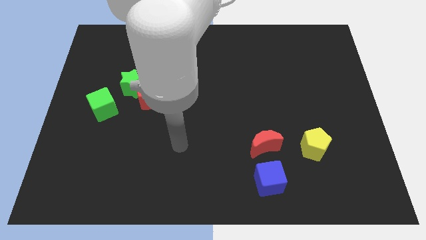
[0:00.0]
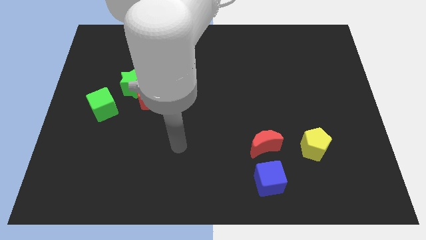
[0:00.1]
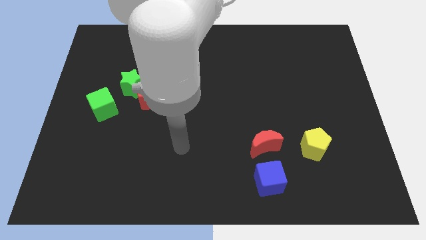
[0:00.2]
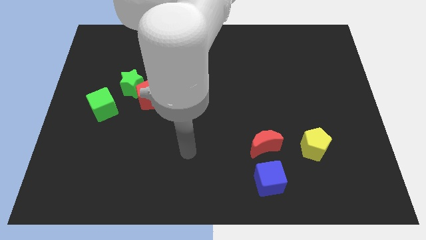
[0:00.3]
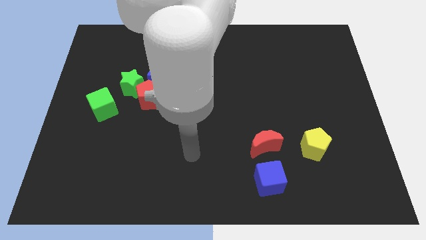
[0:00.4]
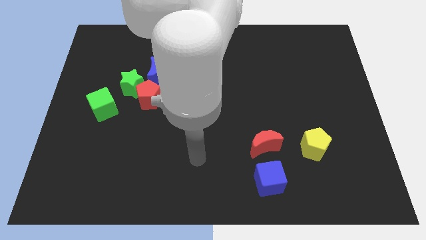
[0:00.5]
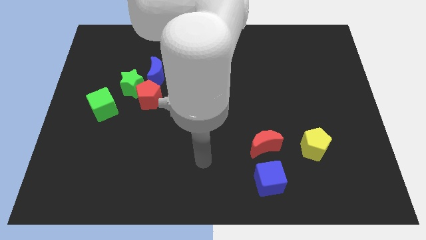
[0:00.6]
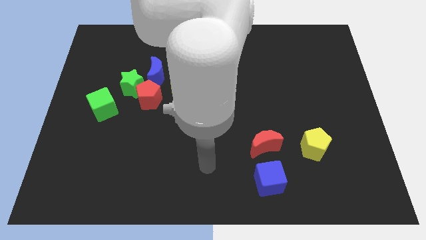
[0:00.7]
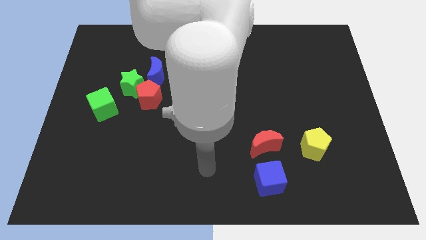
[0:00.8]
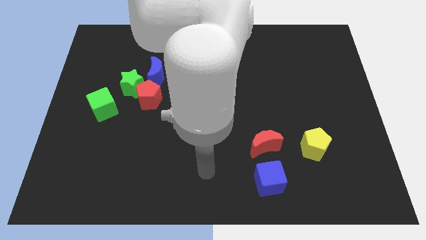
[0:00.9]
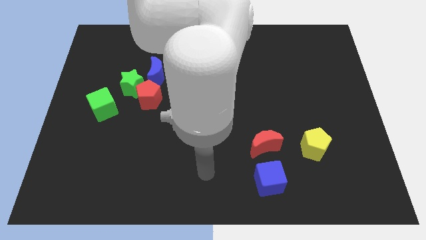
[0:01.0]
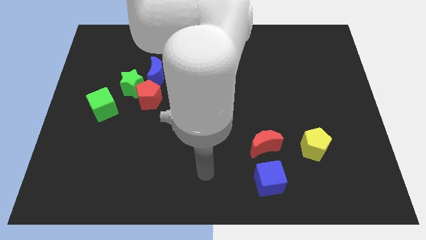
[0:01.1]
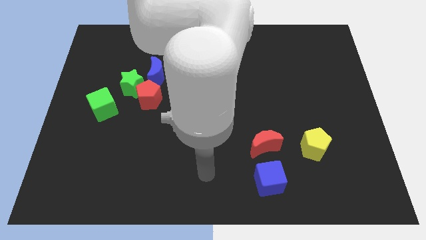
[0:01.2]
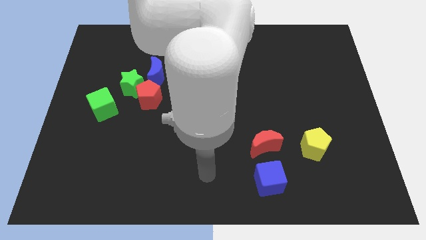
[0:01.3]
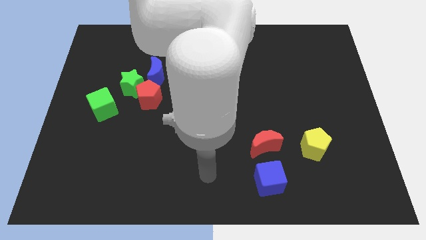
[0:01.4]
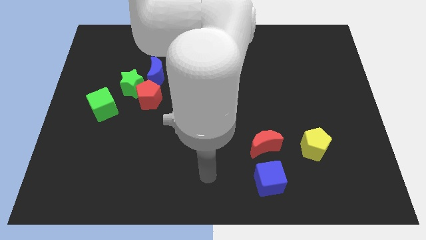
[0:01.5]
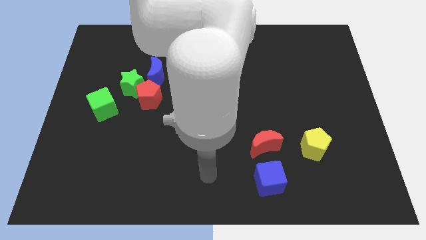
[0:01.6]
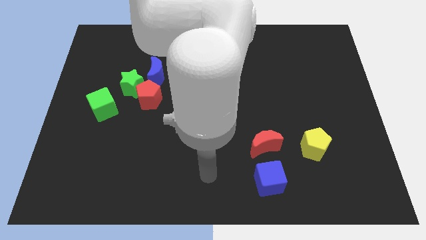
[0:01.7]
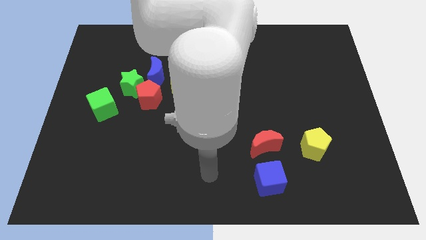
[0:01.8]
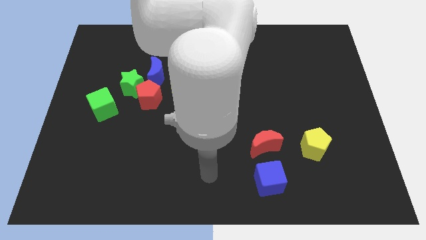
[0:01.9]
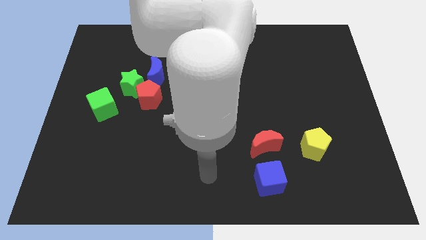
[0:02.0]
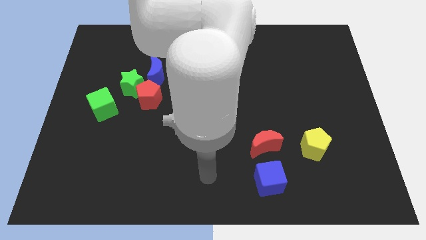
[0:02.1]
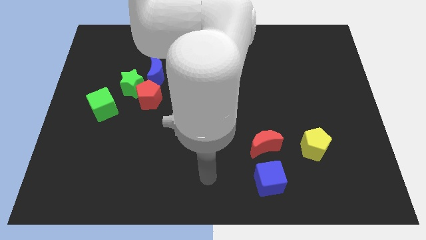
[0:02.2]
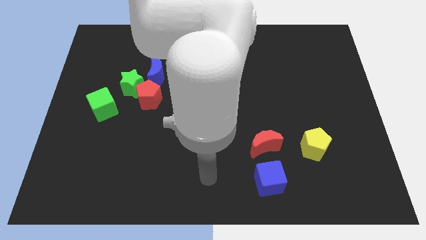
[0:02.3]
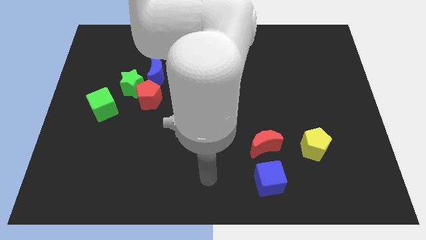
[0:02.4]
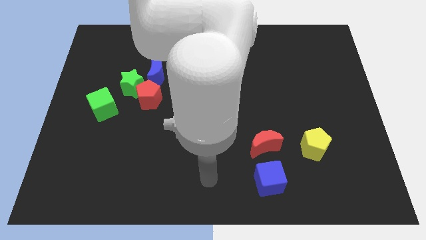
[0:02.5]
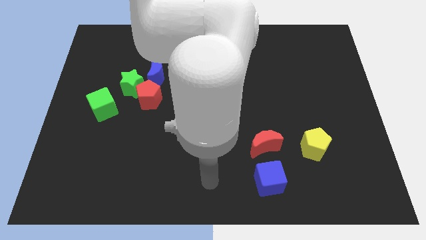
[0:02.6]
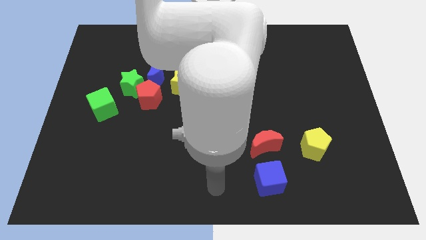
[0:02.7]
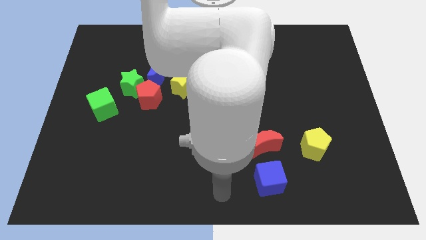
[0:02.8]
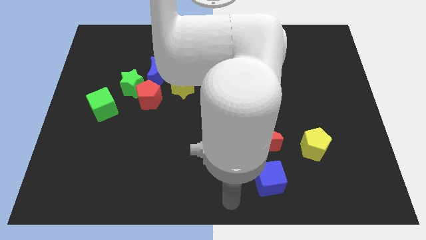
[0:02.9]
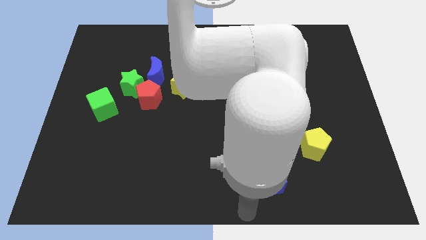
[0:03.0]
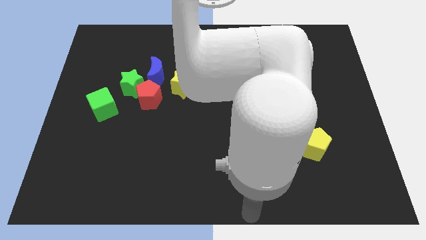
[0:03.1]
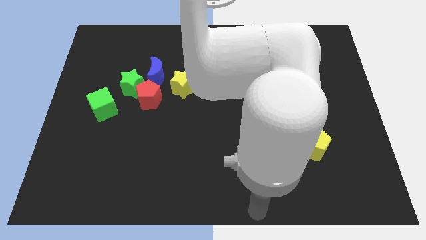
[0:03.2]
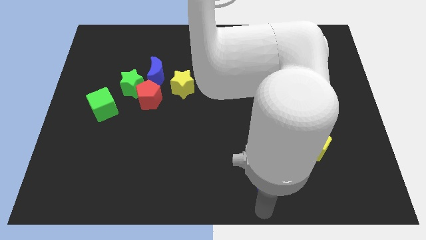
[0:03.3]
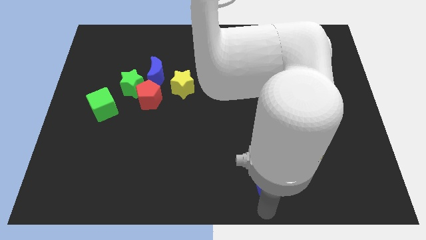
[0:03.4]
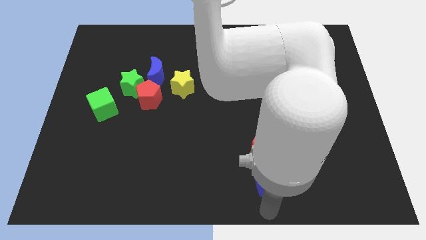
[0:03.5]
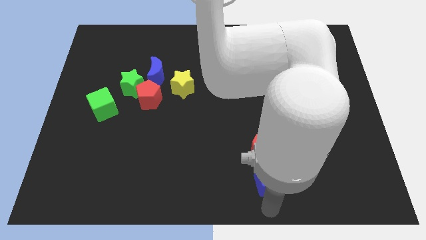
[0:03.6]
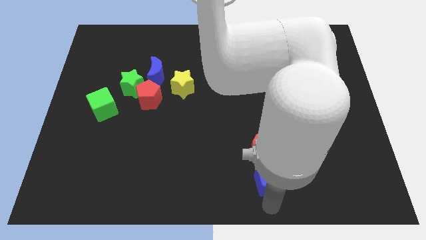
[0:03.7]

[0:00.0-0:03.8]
move the arm to the bottom side of the blue cube

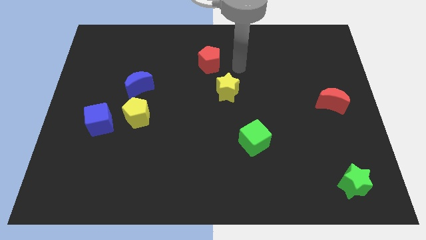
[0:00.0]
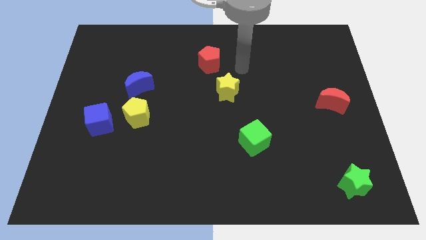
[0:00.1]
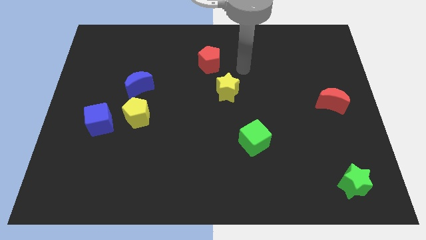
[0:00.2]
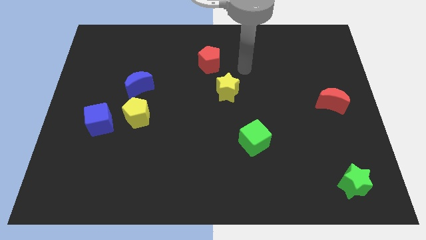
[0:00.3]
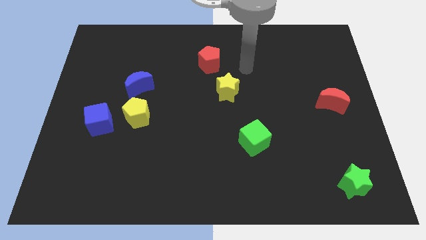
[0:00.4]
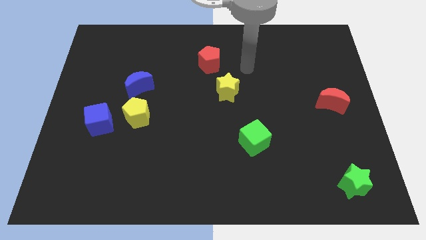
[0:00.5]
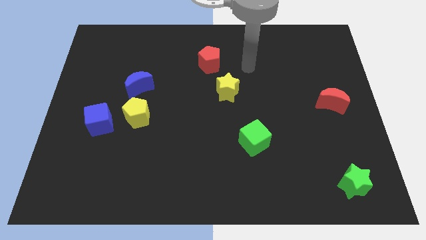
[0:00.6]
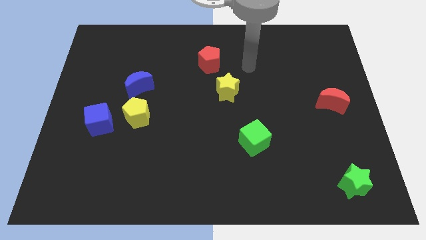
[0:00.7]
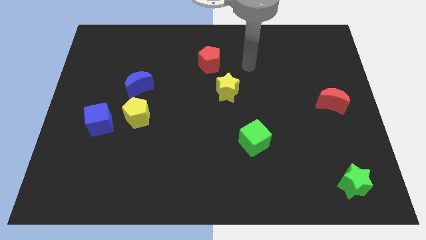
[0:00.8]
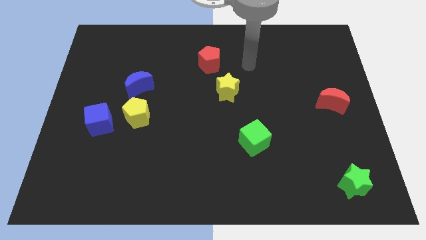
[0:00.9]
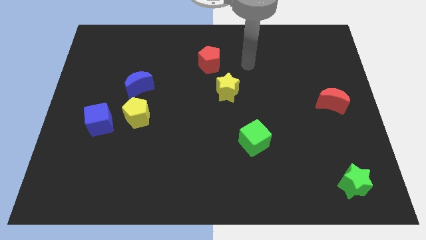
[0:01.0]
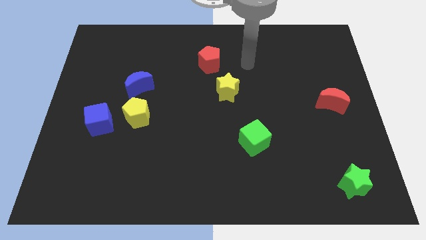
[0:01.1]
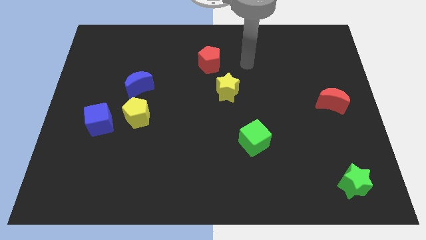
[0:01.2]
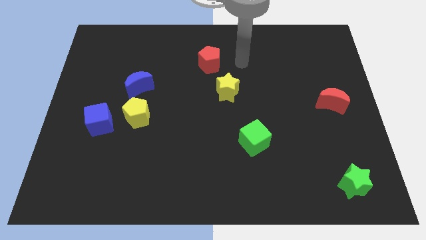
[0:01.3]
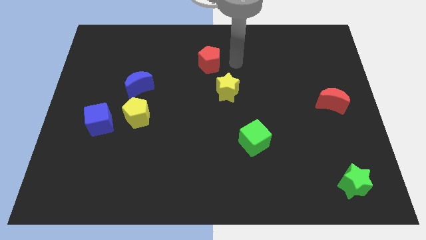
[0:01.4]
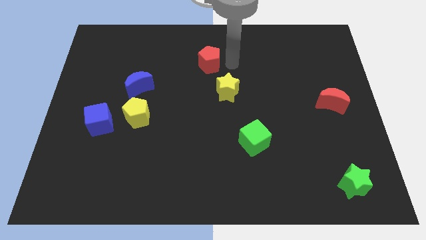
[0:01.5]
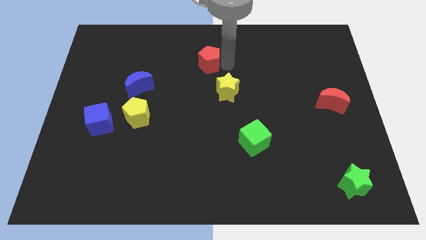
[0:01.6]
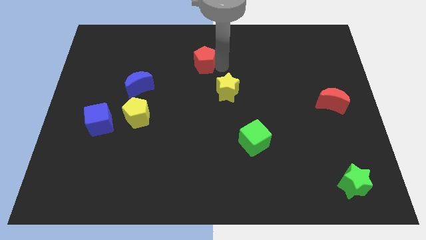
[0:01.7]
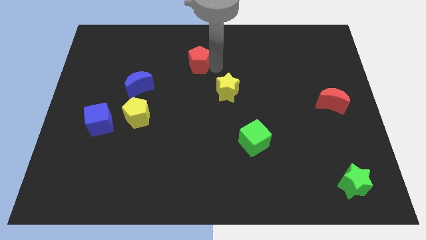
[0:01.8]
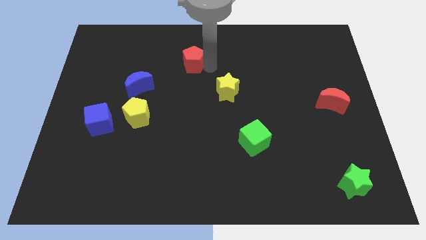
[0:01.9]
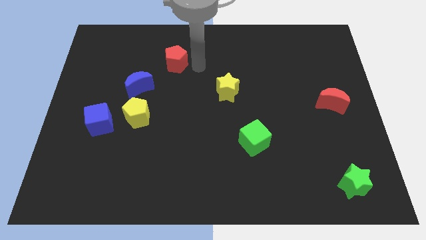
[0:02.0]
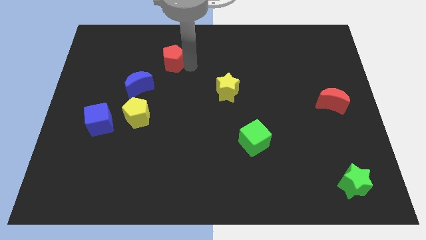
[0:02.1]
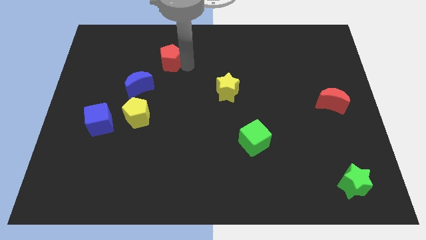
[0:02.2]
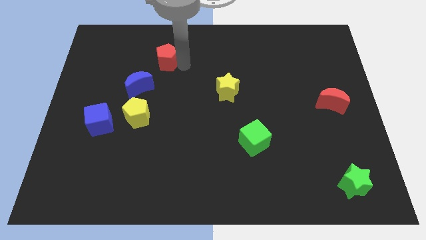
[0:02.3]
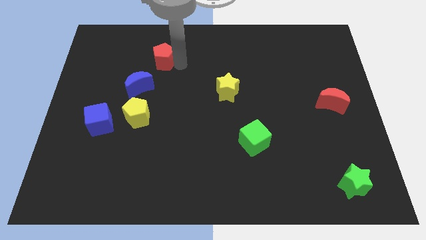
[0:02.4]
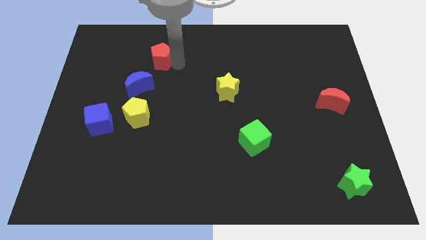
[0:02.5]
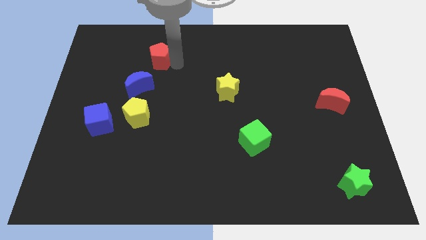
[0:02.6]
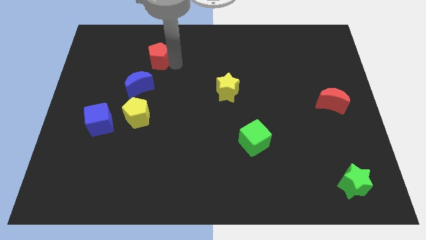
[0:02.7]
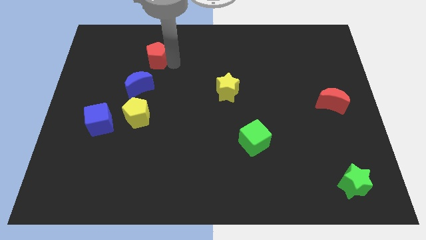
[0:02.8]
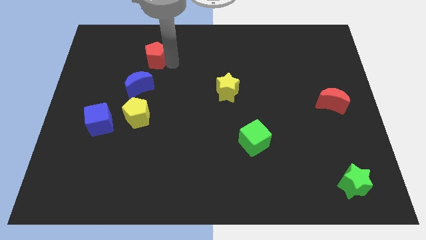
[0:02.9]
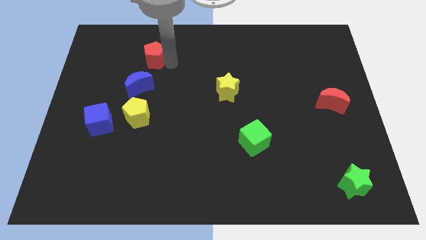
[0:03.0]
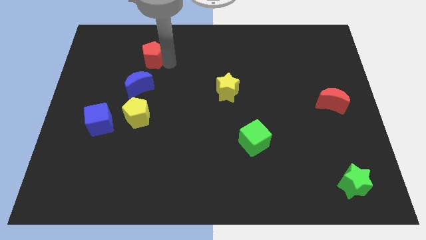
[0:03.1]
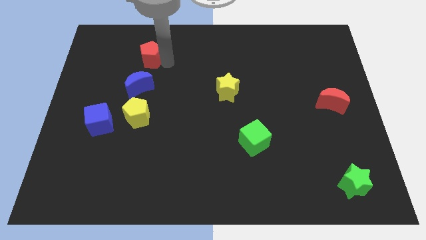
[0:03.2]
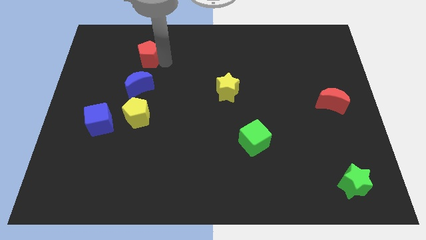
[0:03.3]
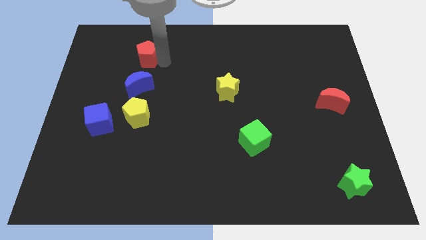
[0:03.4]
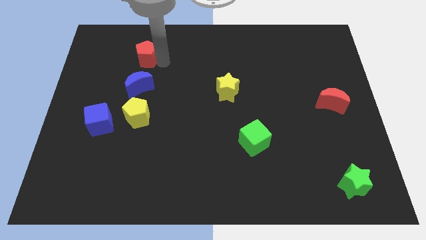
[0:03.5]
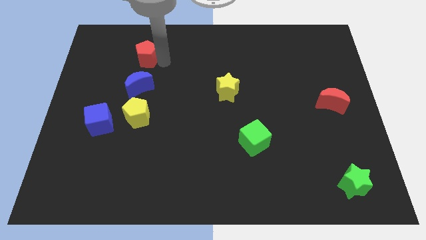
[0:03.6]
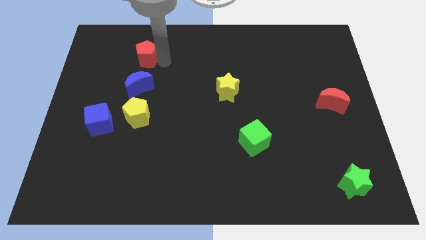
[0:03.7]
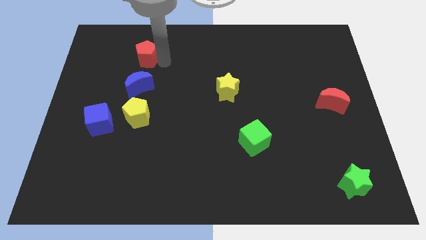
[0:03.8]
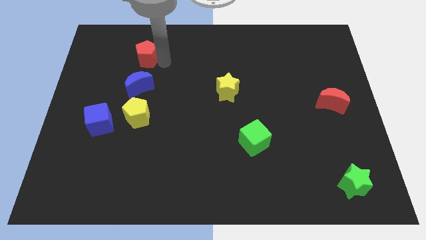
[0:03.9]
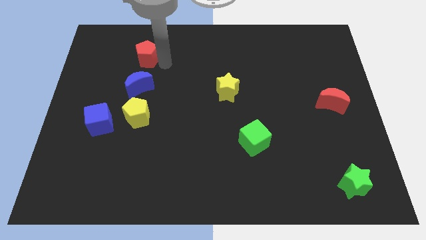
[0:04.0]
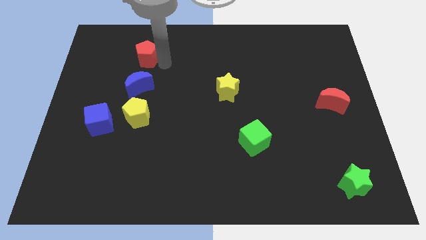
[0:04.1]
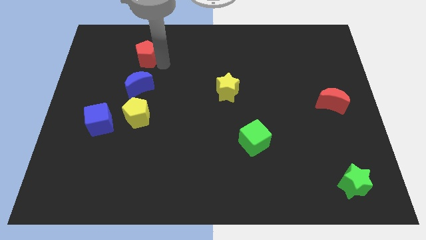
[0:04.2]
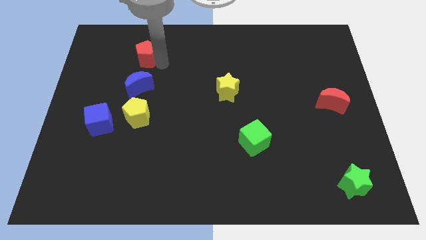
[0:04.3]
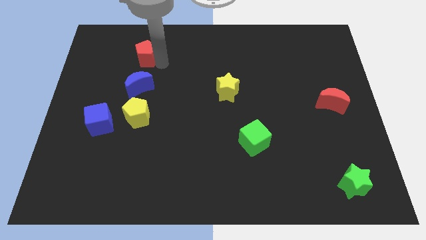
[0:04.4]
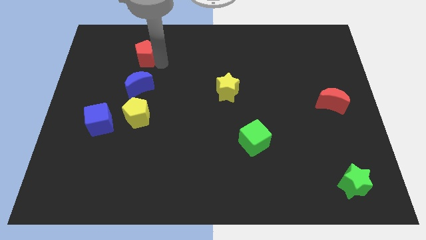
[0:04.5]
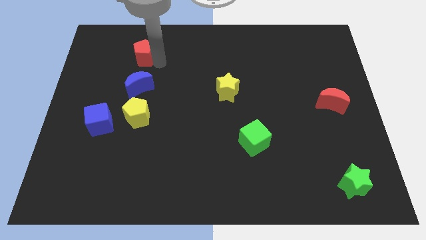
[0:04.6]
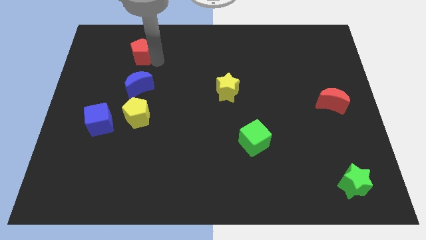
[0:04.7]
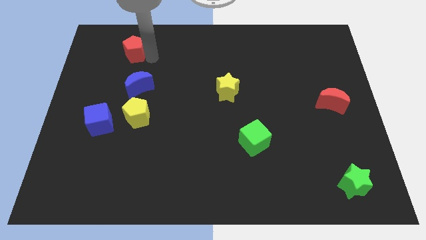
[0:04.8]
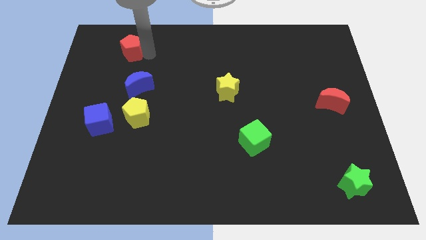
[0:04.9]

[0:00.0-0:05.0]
push the red pentagon to the left top of the board
